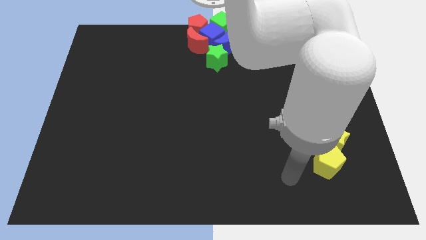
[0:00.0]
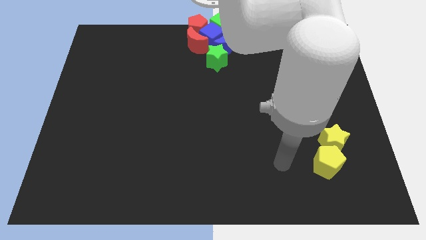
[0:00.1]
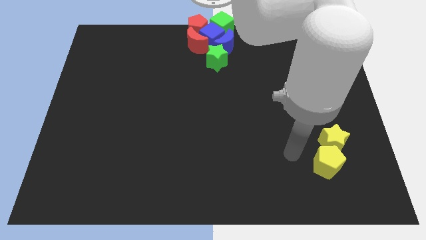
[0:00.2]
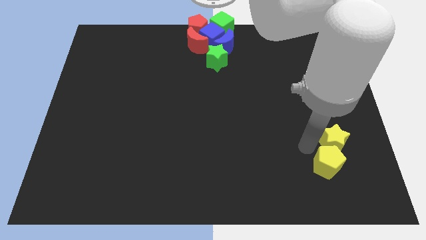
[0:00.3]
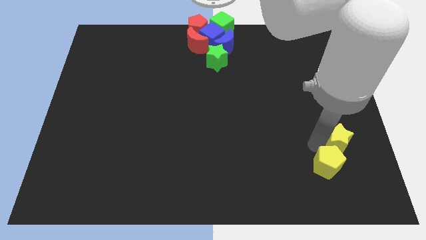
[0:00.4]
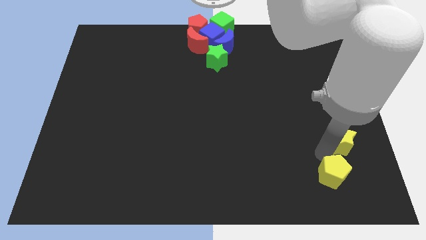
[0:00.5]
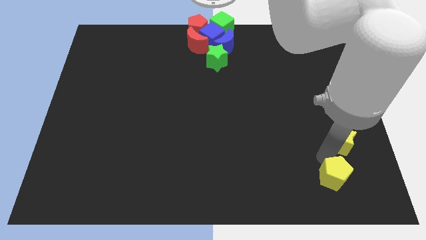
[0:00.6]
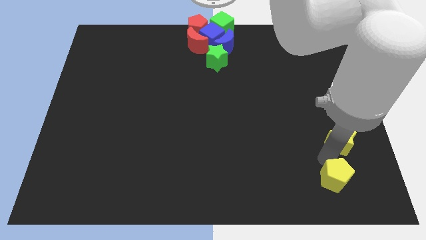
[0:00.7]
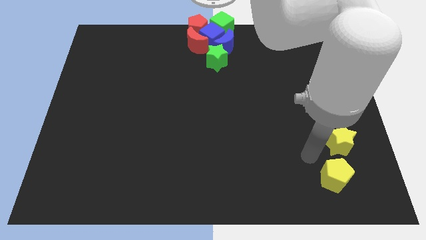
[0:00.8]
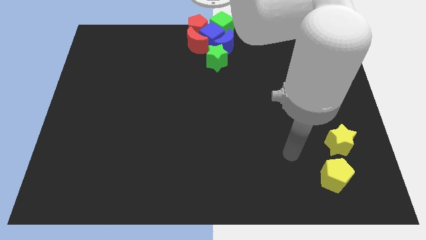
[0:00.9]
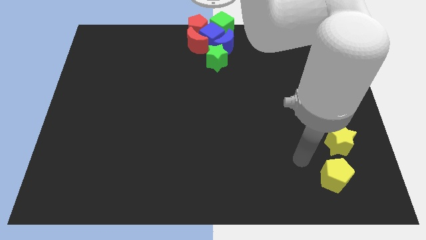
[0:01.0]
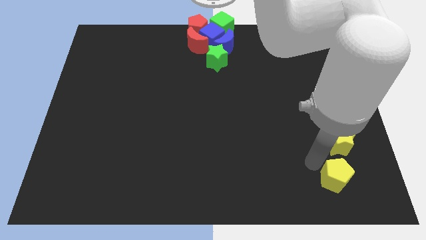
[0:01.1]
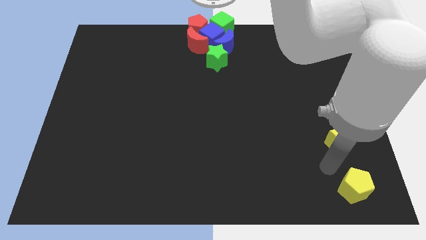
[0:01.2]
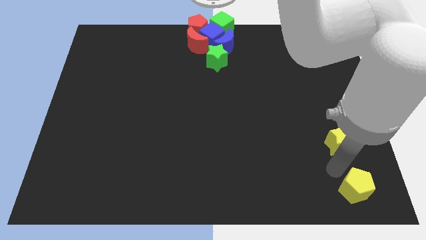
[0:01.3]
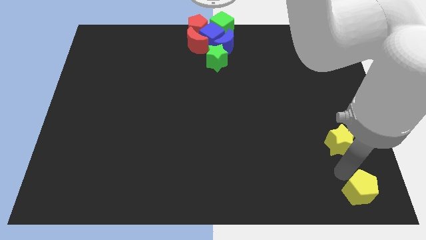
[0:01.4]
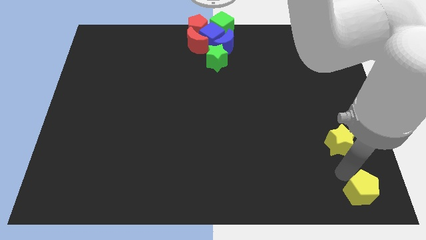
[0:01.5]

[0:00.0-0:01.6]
separate the yellow pentagon from the yellow star

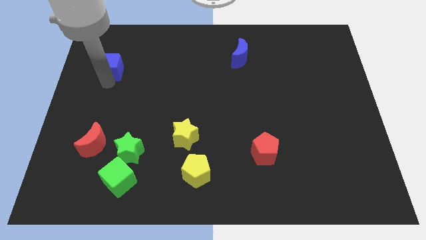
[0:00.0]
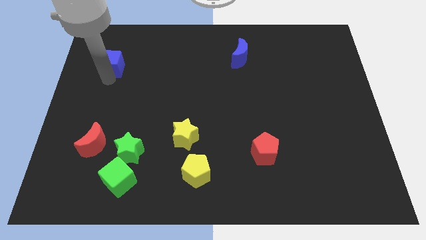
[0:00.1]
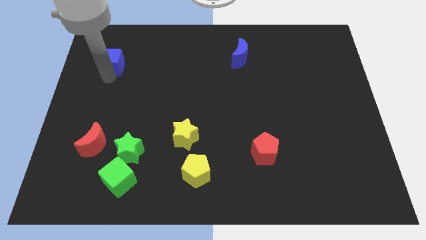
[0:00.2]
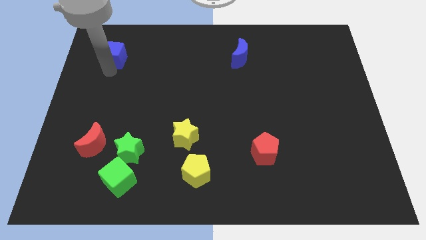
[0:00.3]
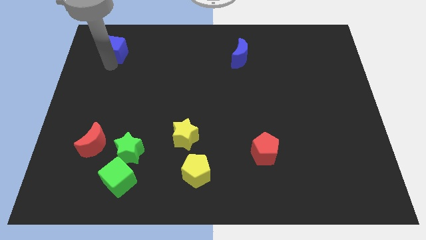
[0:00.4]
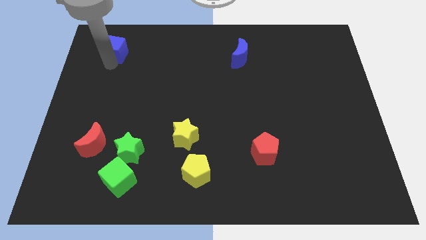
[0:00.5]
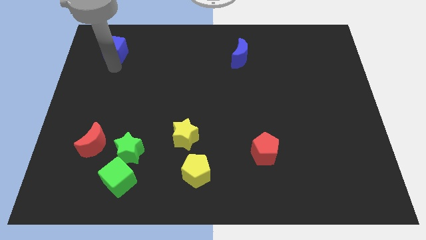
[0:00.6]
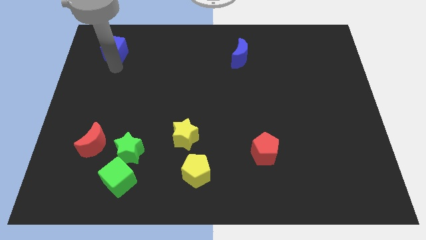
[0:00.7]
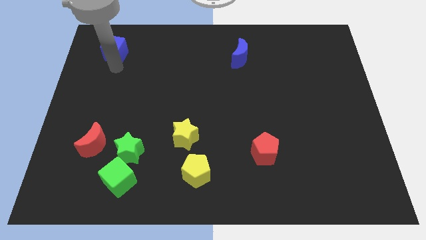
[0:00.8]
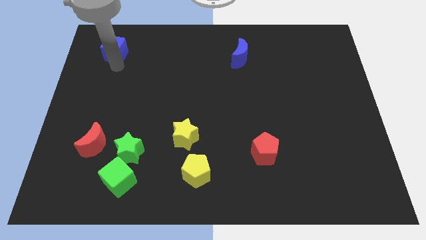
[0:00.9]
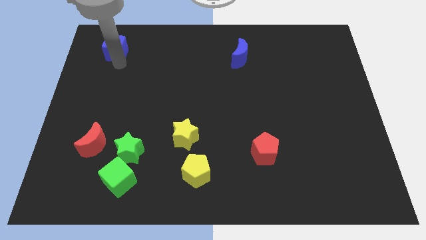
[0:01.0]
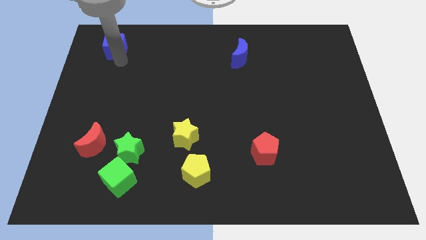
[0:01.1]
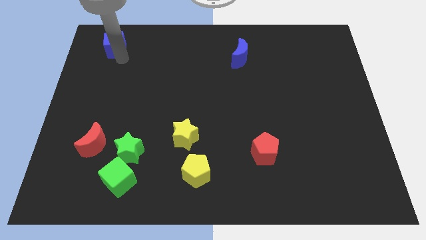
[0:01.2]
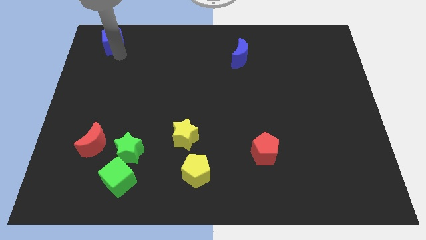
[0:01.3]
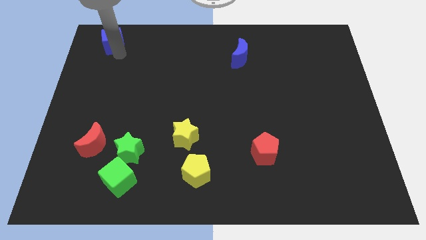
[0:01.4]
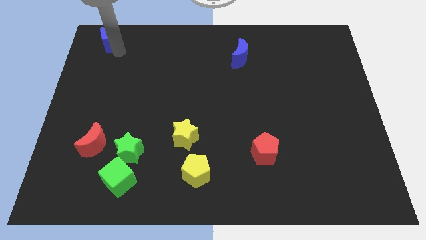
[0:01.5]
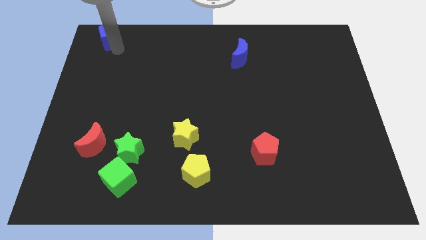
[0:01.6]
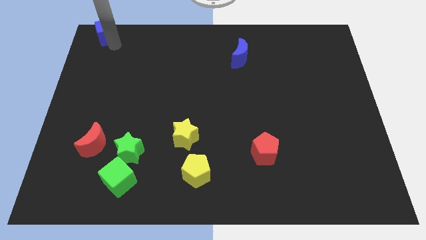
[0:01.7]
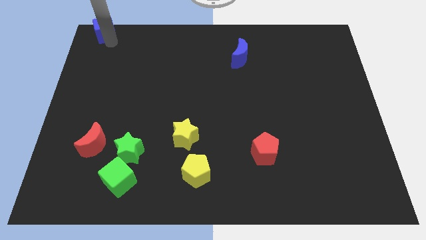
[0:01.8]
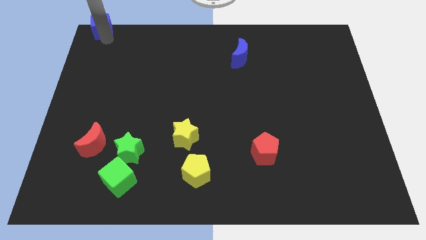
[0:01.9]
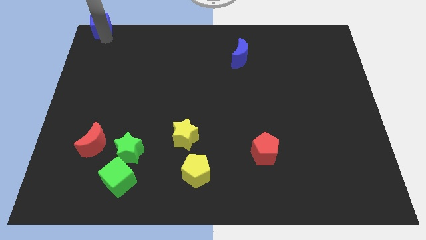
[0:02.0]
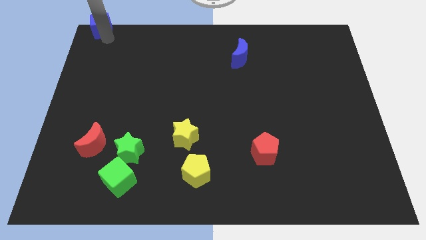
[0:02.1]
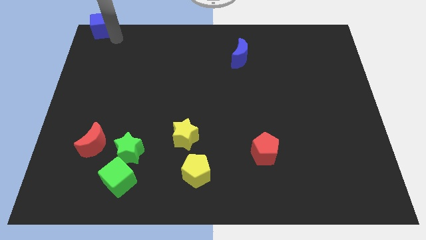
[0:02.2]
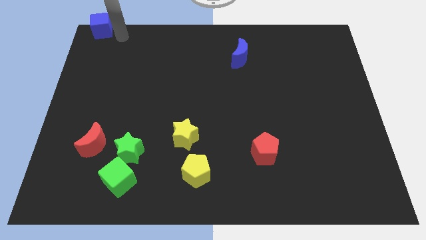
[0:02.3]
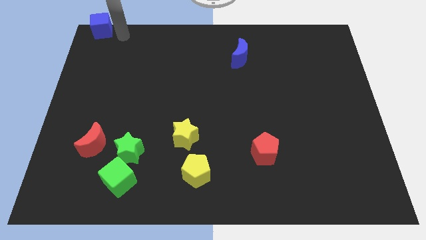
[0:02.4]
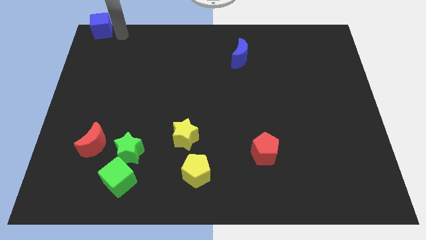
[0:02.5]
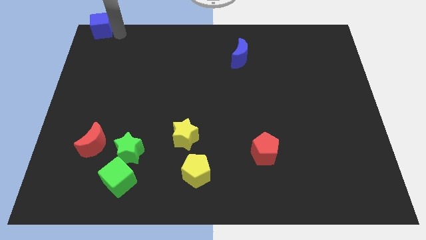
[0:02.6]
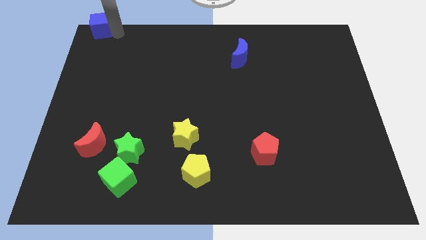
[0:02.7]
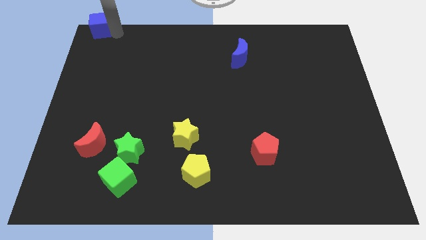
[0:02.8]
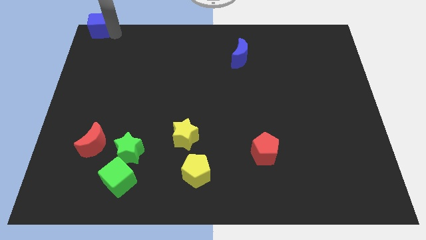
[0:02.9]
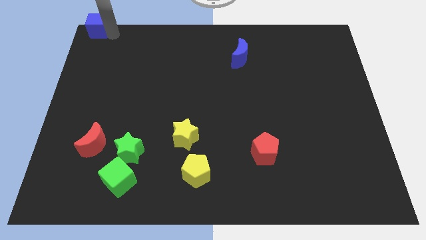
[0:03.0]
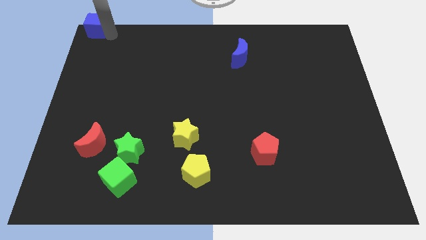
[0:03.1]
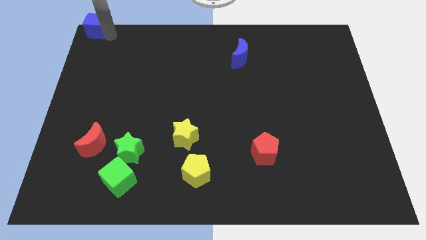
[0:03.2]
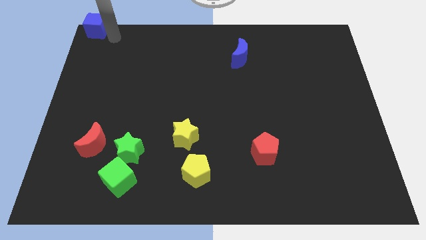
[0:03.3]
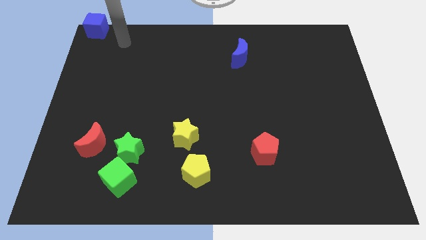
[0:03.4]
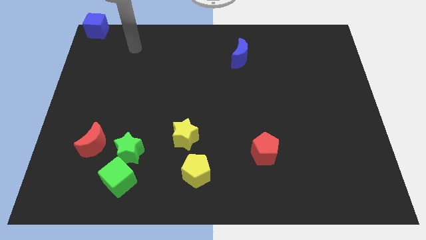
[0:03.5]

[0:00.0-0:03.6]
place the blue cube to the top left side of the board

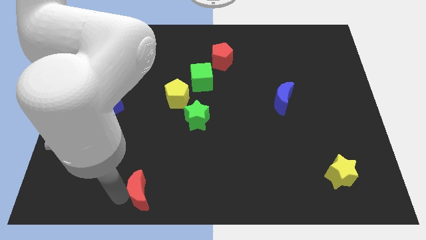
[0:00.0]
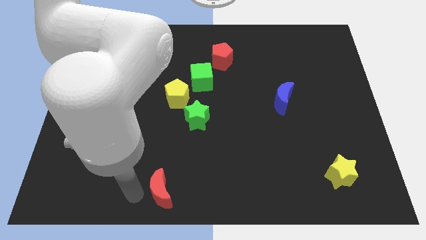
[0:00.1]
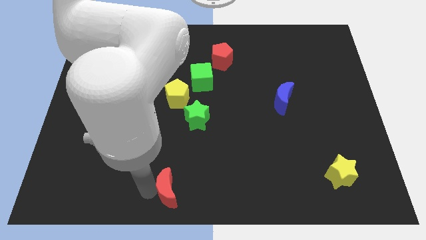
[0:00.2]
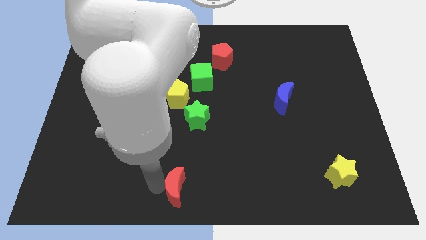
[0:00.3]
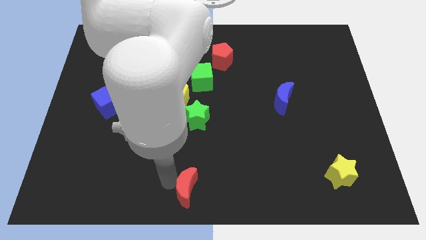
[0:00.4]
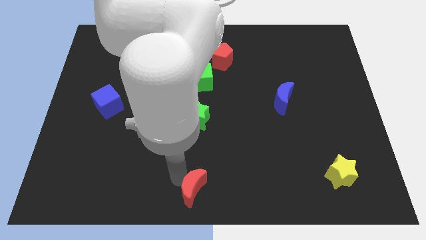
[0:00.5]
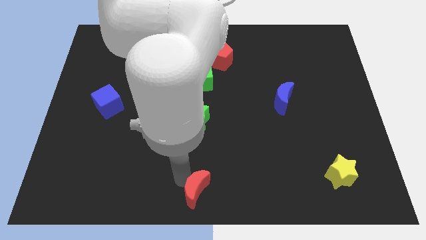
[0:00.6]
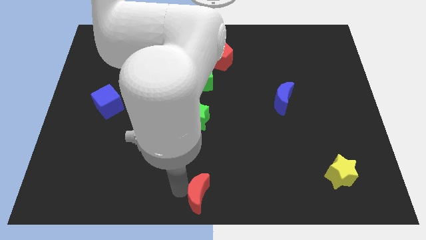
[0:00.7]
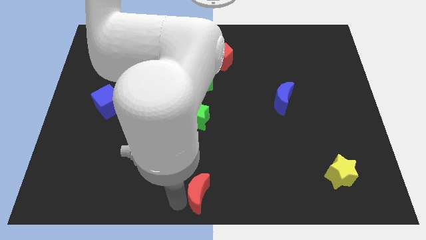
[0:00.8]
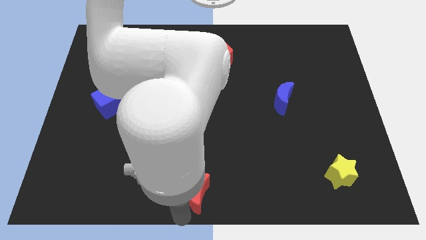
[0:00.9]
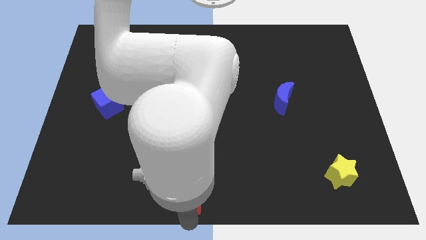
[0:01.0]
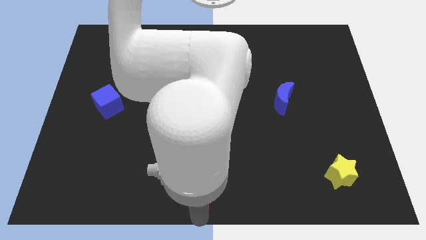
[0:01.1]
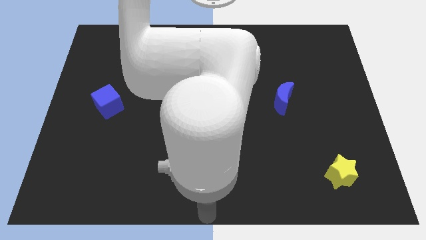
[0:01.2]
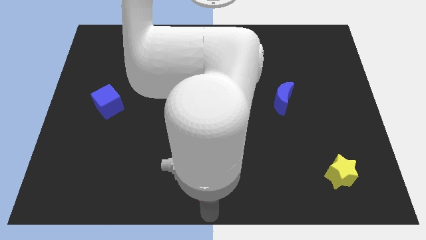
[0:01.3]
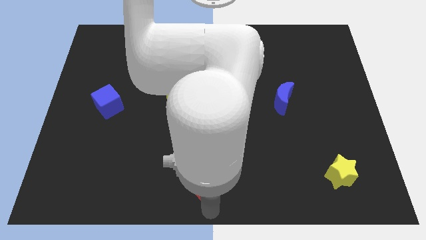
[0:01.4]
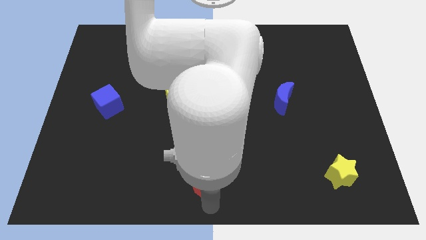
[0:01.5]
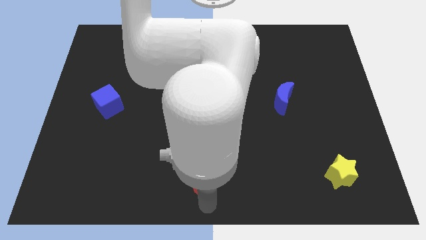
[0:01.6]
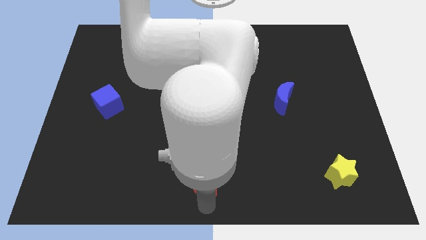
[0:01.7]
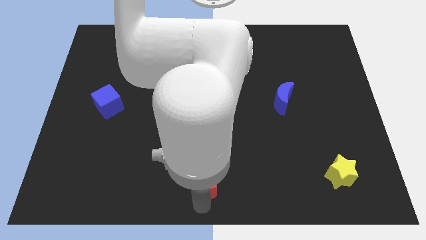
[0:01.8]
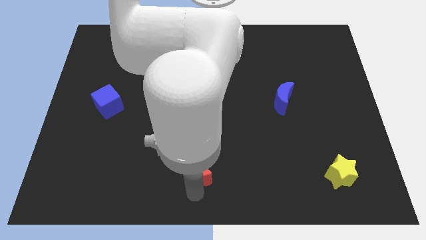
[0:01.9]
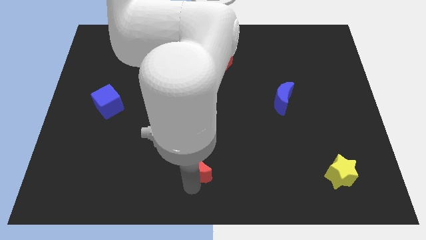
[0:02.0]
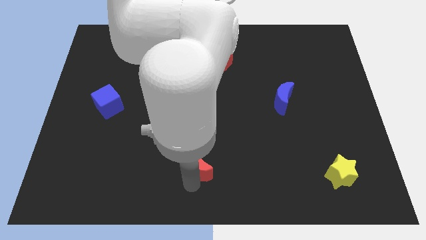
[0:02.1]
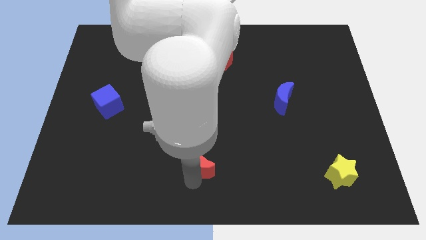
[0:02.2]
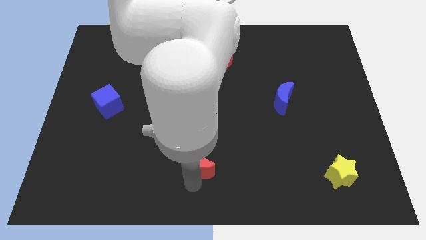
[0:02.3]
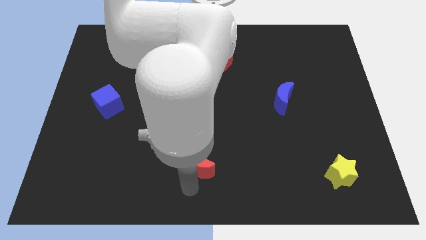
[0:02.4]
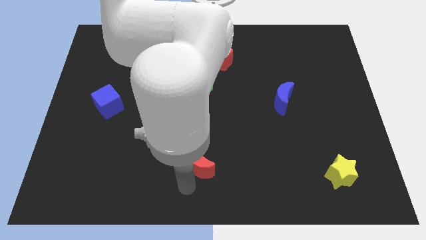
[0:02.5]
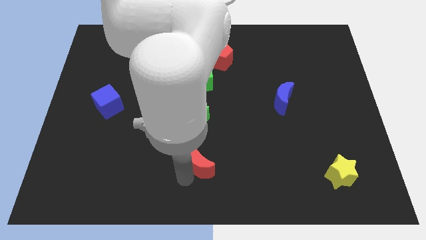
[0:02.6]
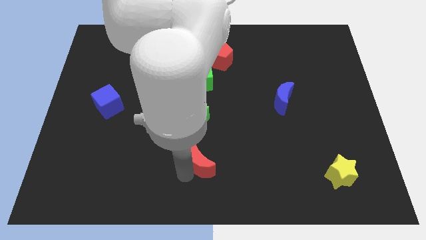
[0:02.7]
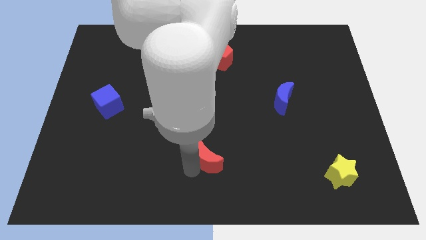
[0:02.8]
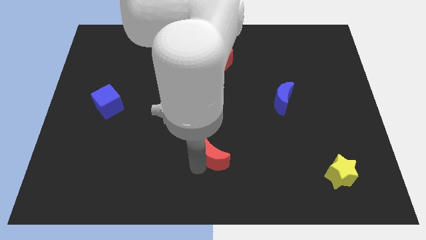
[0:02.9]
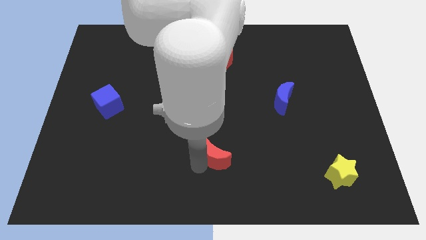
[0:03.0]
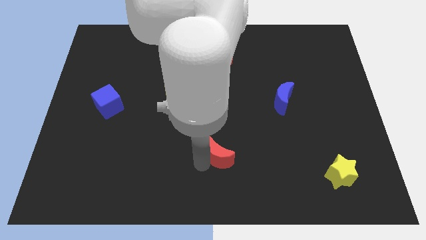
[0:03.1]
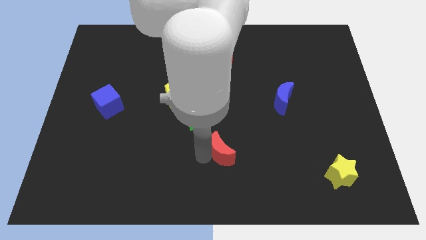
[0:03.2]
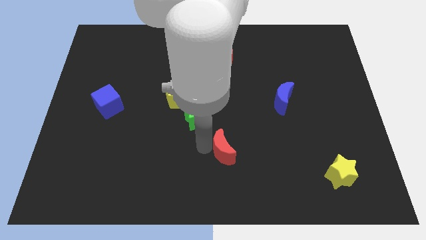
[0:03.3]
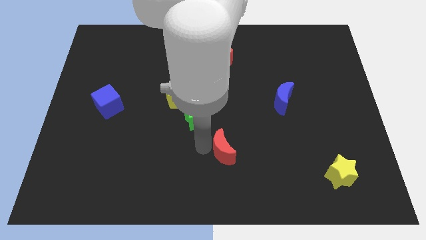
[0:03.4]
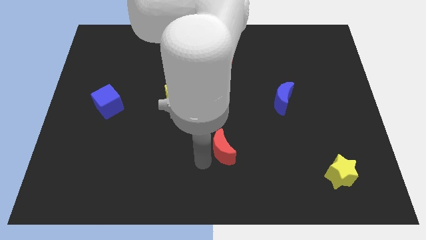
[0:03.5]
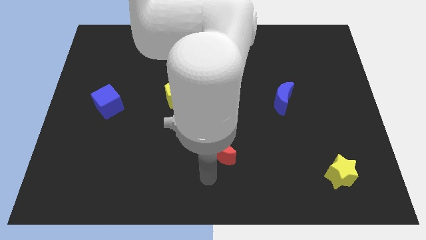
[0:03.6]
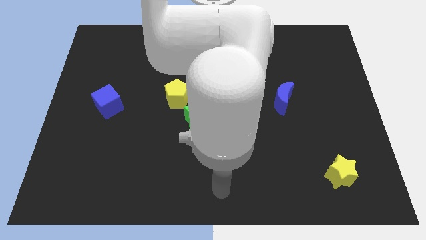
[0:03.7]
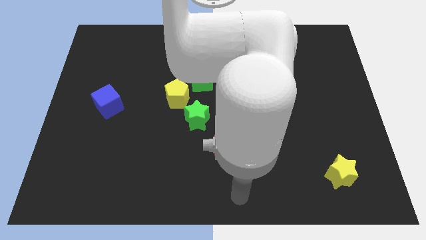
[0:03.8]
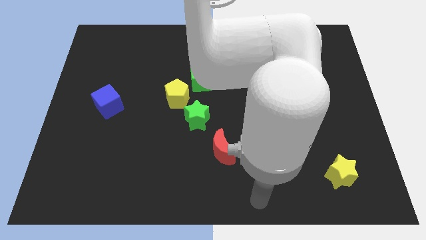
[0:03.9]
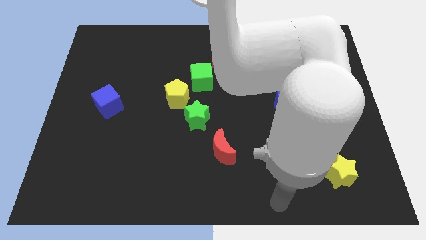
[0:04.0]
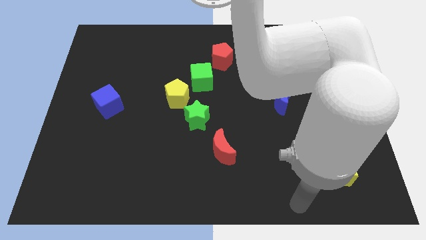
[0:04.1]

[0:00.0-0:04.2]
slide red moon to the bottom right of green star
